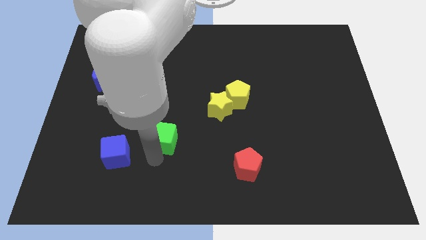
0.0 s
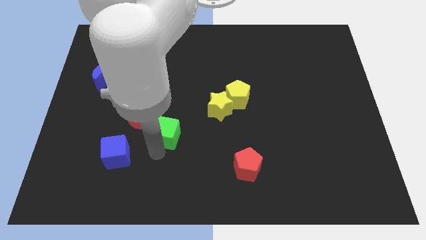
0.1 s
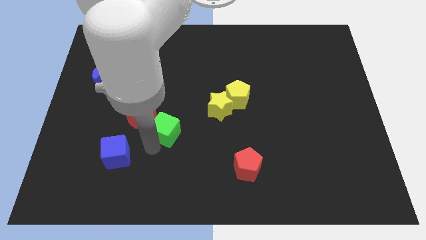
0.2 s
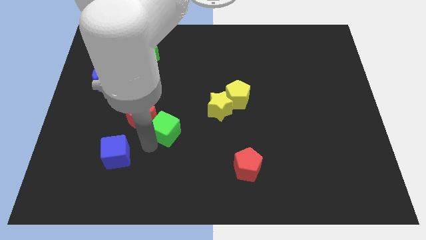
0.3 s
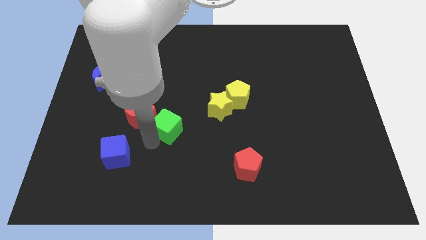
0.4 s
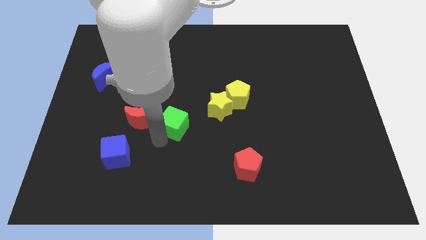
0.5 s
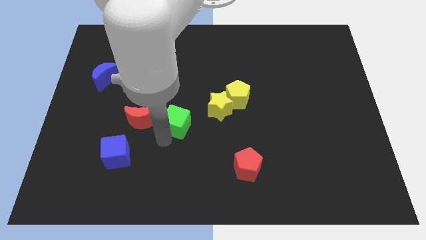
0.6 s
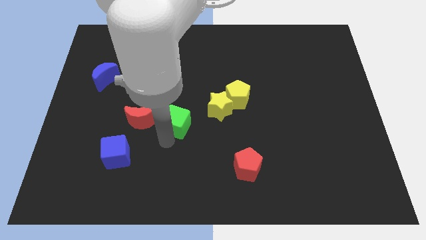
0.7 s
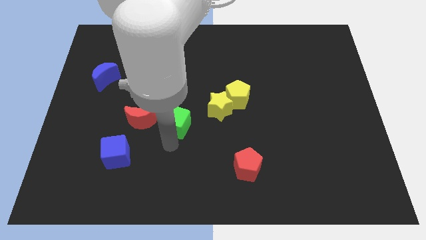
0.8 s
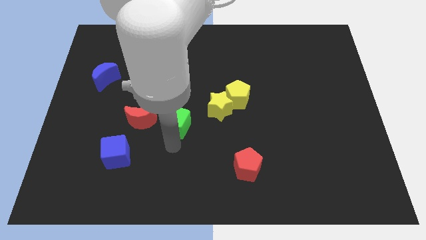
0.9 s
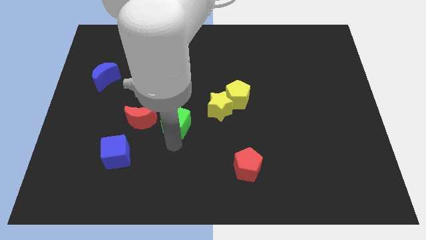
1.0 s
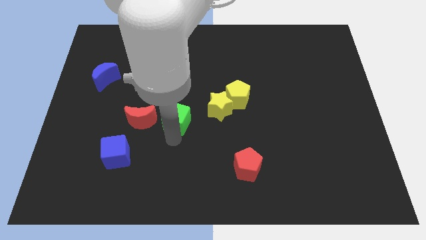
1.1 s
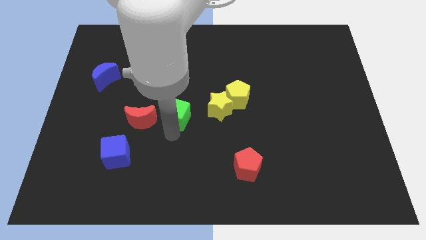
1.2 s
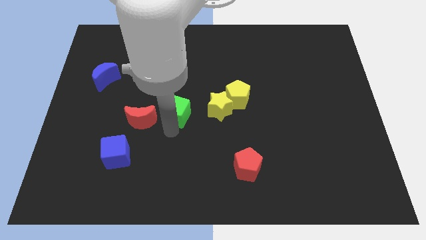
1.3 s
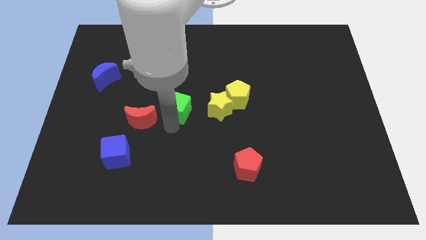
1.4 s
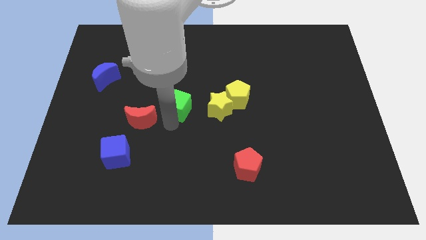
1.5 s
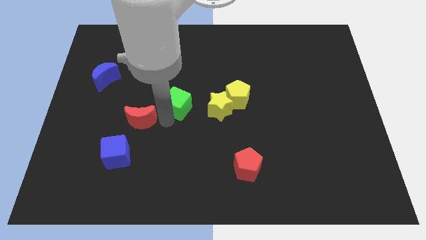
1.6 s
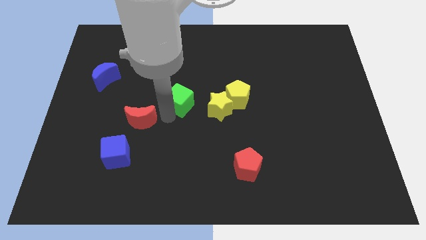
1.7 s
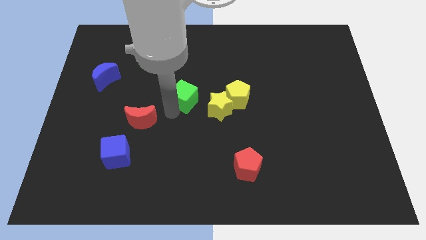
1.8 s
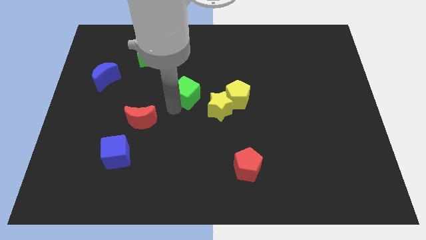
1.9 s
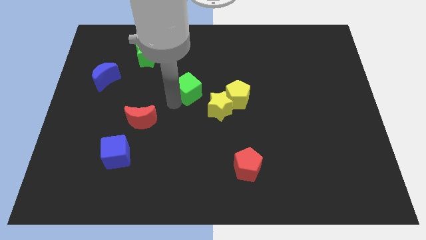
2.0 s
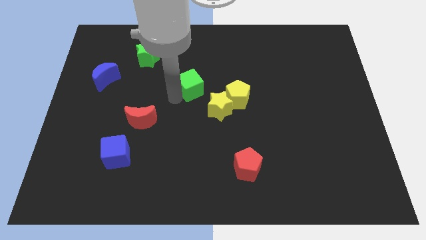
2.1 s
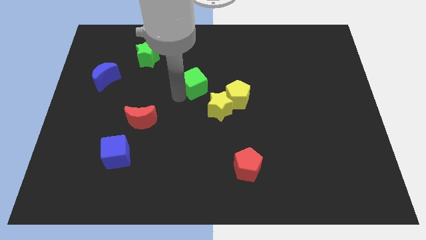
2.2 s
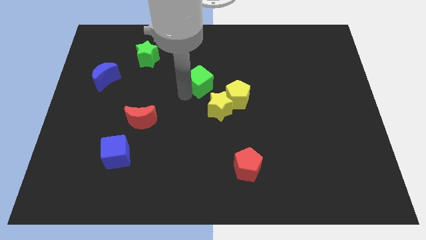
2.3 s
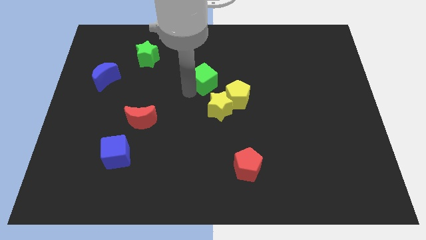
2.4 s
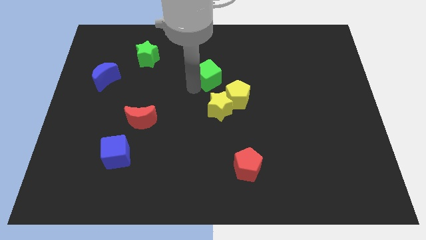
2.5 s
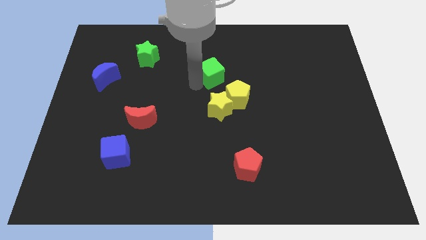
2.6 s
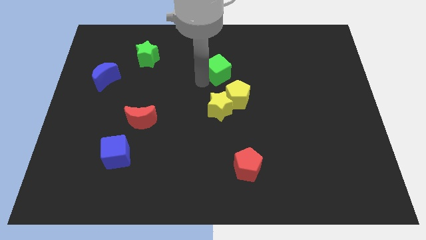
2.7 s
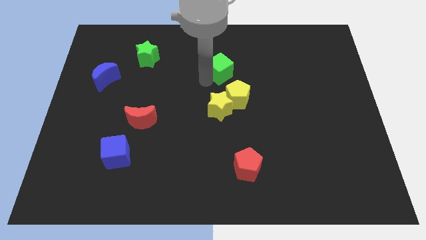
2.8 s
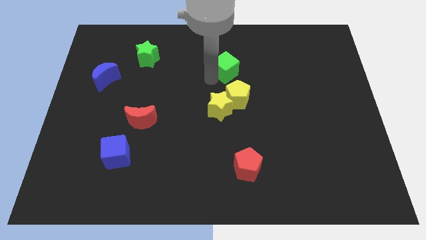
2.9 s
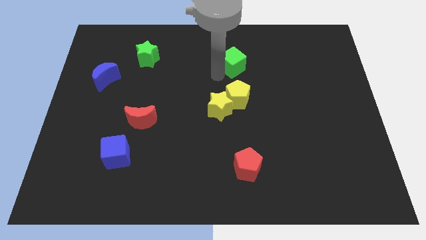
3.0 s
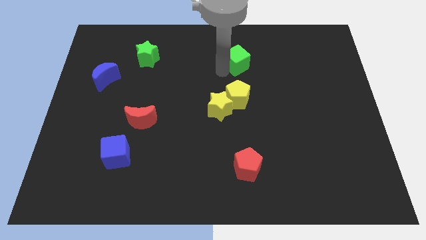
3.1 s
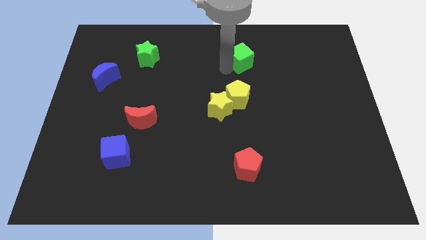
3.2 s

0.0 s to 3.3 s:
place the green cube on the top of the yellow pentagon

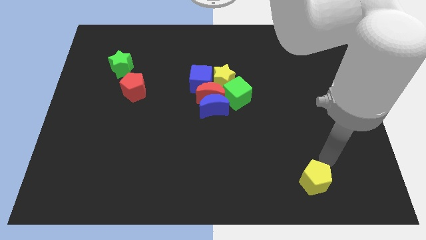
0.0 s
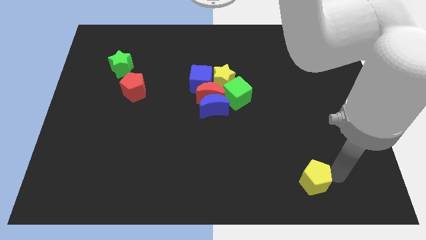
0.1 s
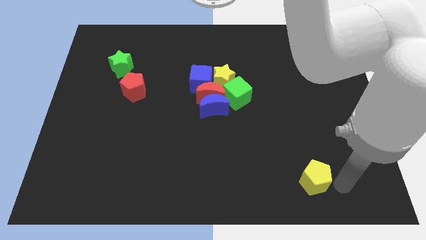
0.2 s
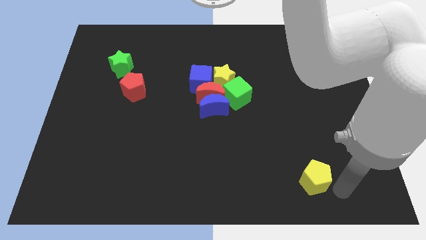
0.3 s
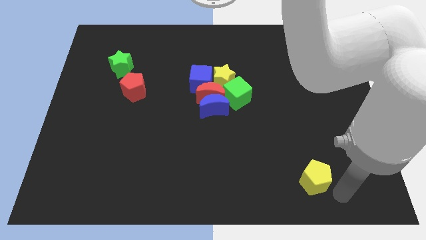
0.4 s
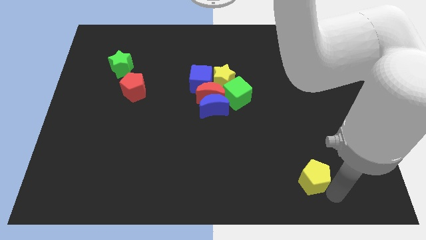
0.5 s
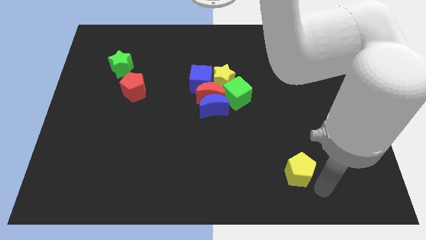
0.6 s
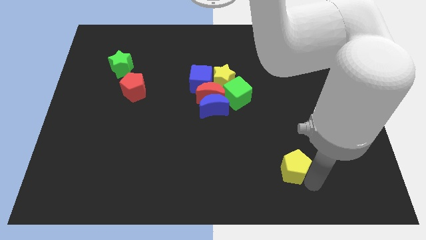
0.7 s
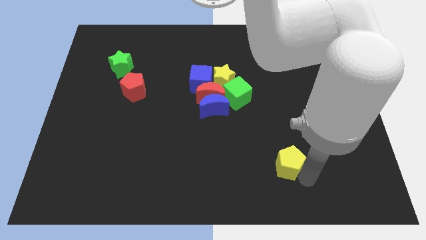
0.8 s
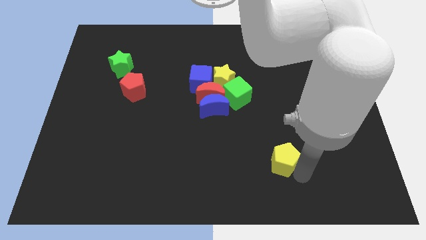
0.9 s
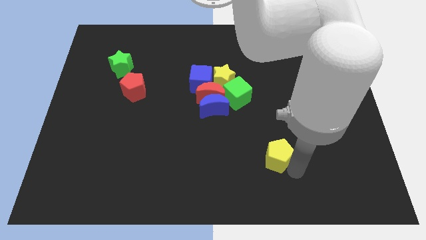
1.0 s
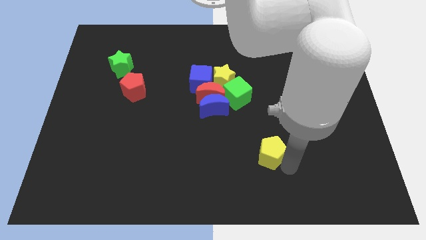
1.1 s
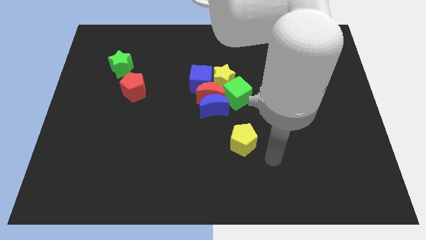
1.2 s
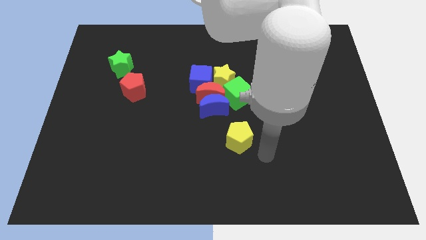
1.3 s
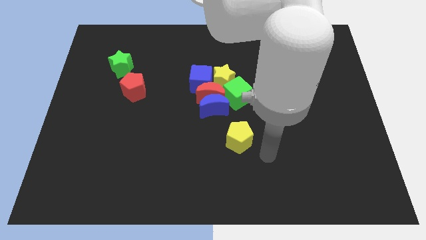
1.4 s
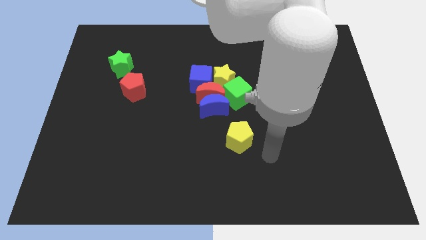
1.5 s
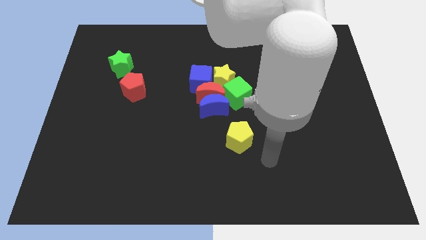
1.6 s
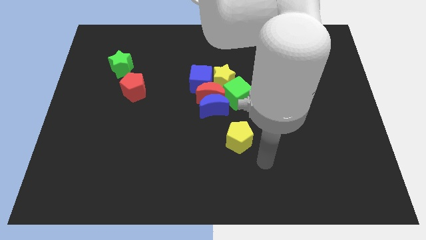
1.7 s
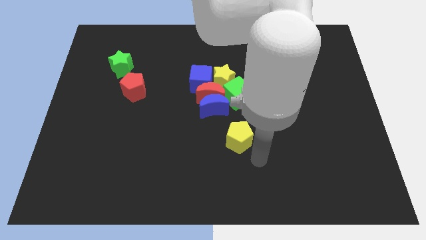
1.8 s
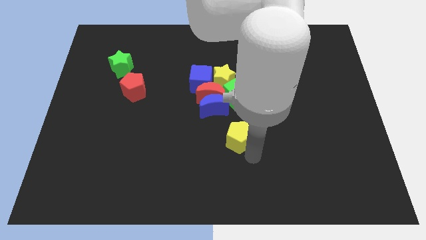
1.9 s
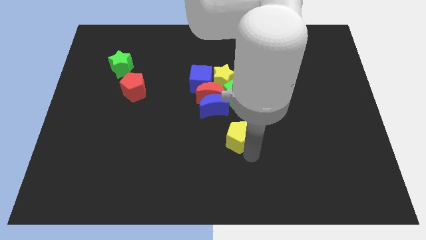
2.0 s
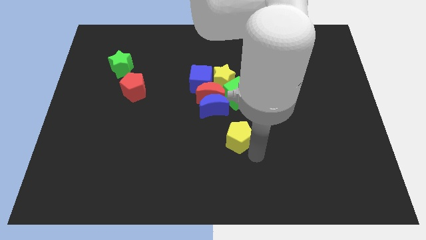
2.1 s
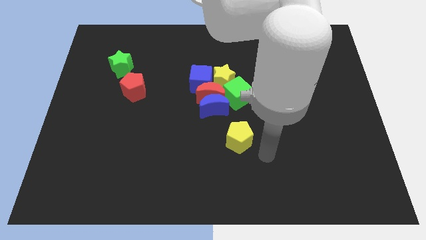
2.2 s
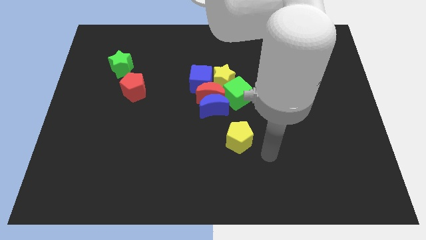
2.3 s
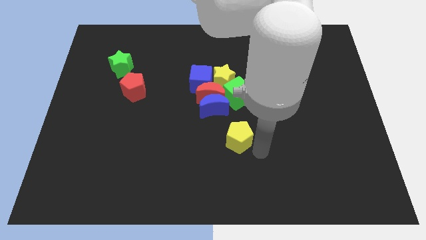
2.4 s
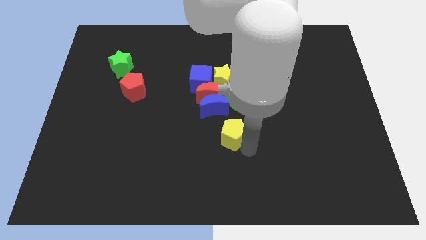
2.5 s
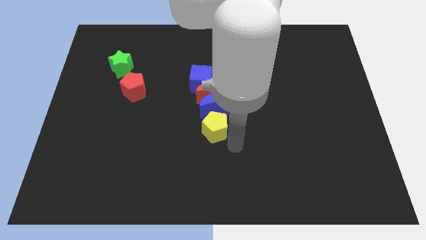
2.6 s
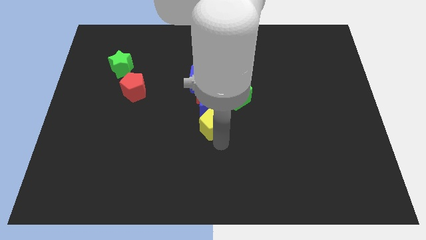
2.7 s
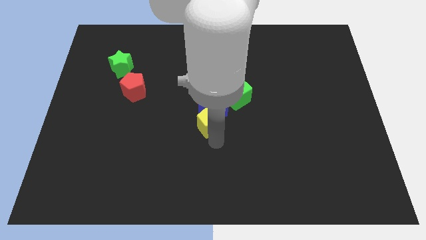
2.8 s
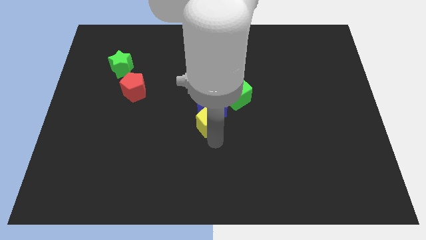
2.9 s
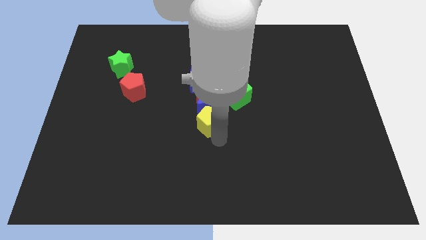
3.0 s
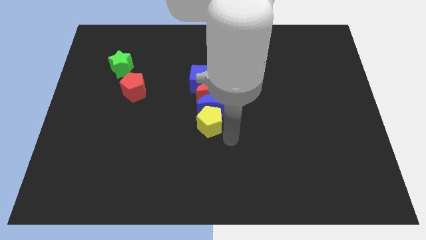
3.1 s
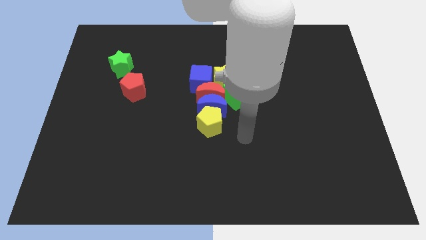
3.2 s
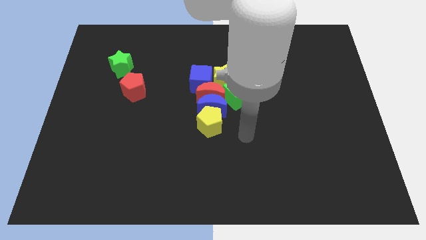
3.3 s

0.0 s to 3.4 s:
place yellow pentagon to the bottom of the blue crescent

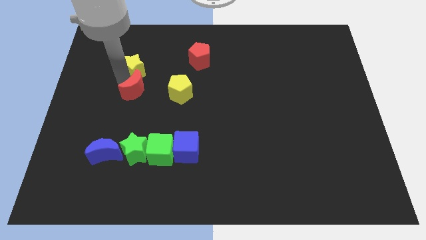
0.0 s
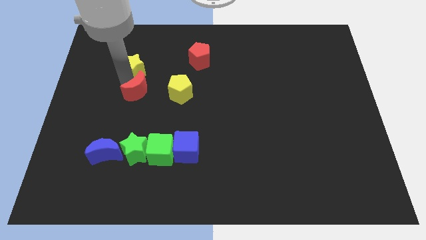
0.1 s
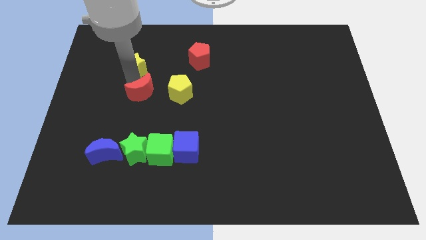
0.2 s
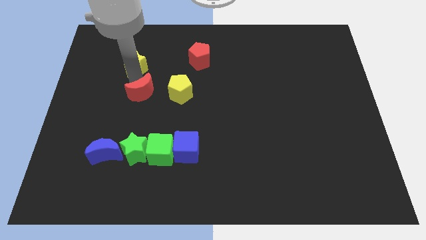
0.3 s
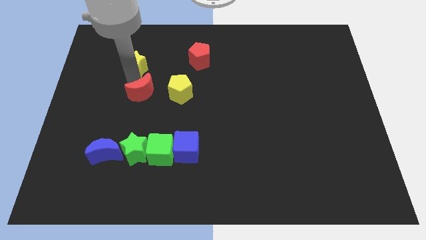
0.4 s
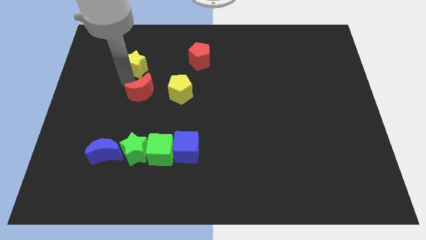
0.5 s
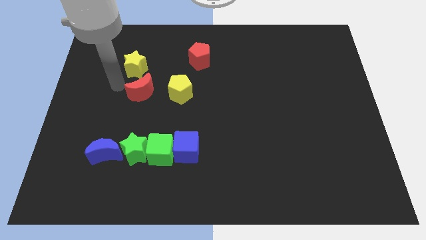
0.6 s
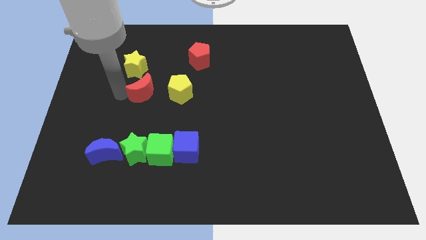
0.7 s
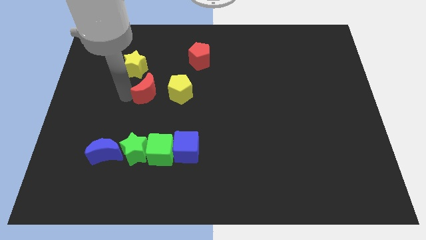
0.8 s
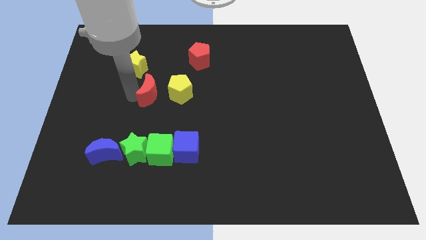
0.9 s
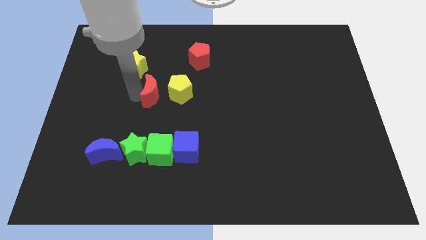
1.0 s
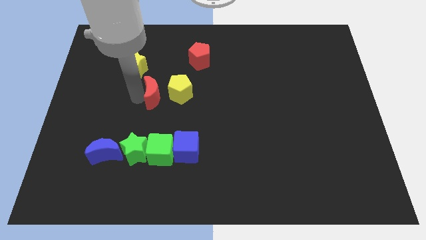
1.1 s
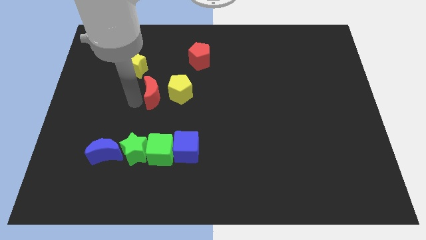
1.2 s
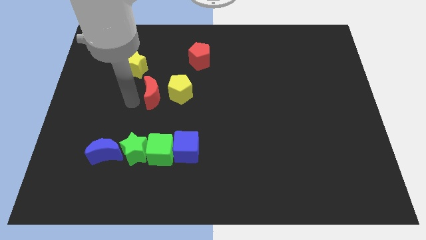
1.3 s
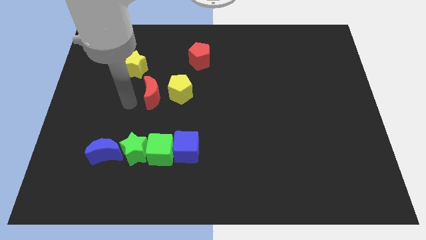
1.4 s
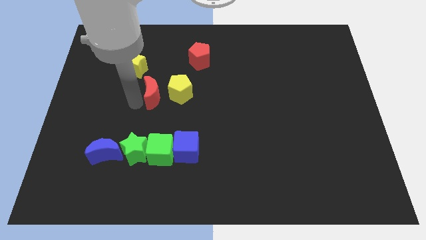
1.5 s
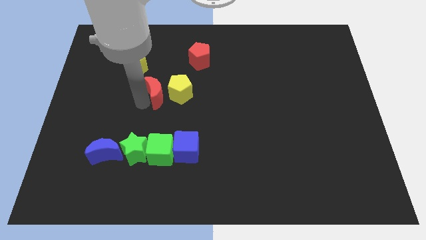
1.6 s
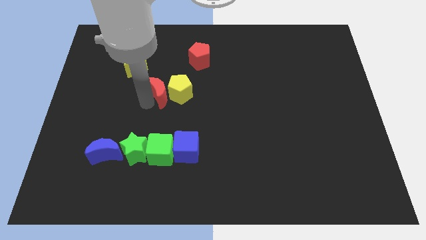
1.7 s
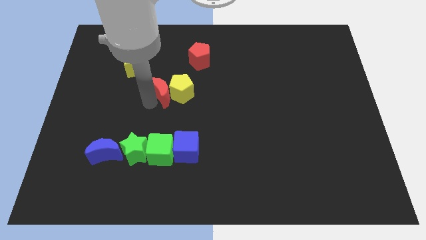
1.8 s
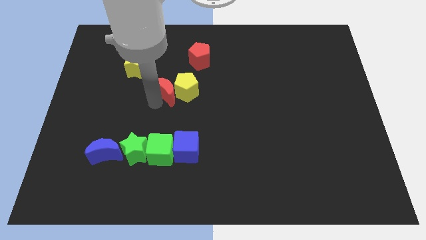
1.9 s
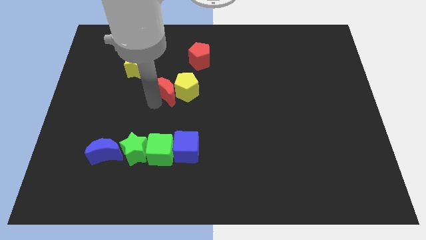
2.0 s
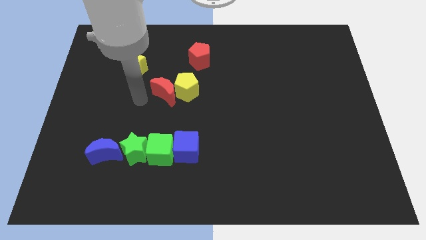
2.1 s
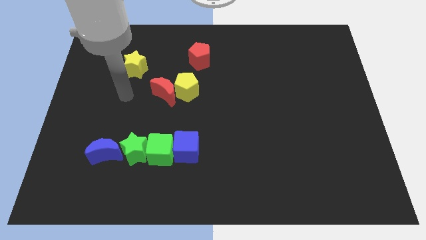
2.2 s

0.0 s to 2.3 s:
move the red crescent into the yellow pentagon

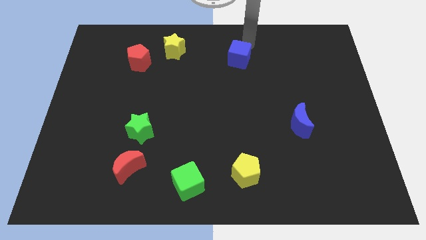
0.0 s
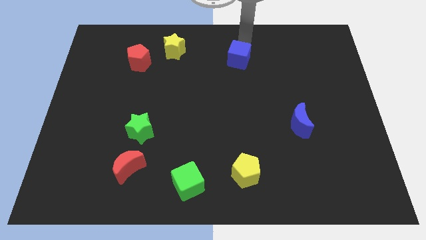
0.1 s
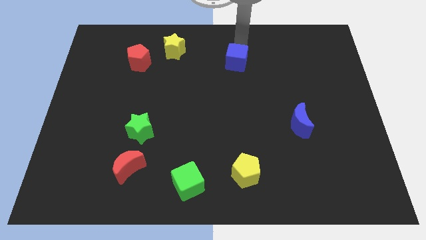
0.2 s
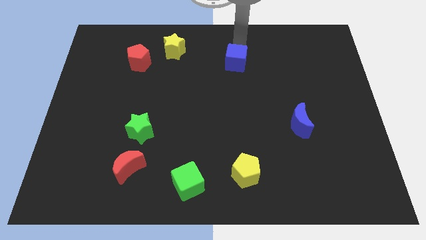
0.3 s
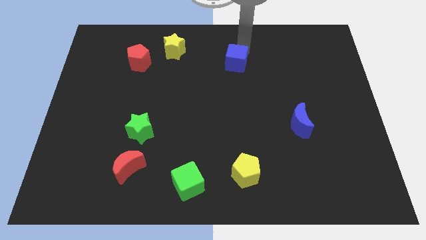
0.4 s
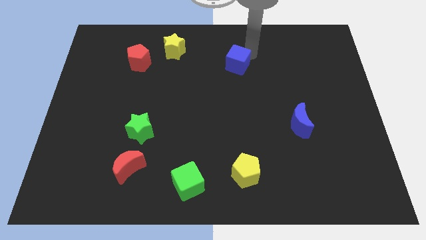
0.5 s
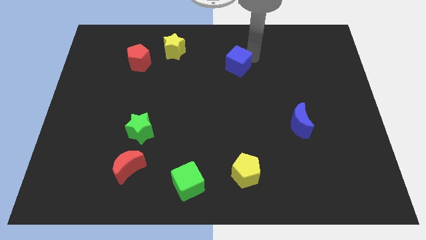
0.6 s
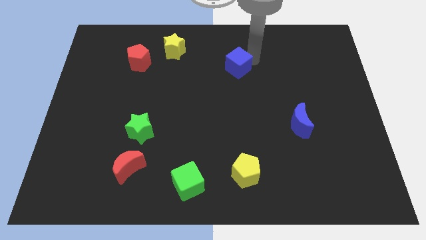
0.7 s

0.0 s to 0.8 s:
push the blue cube towards the center of the board
